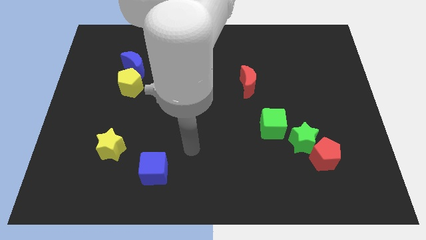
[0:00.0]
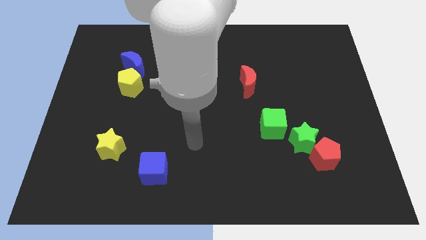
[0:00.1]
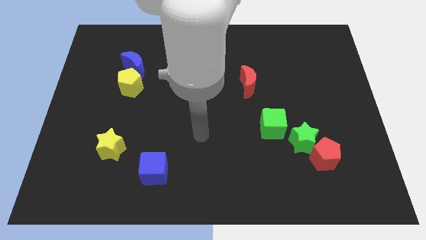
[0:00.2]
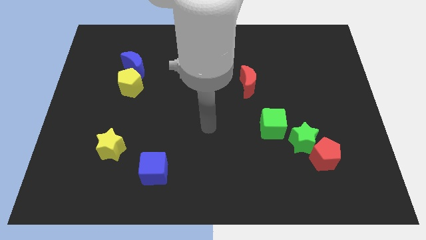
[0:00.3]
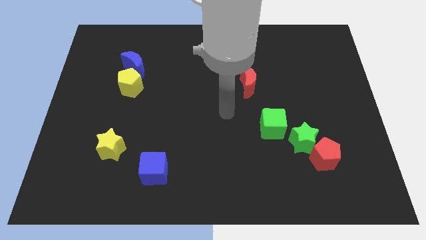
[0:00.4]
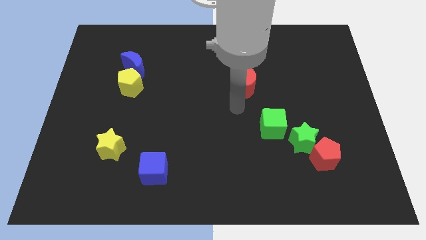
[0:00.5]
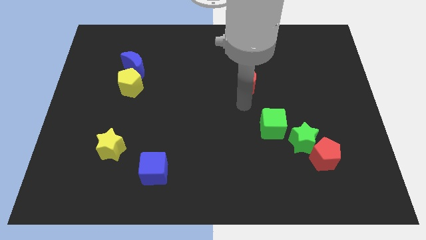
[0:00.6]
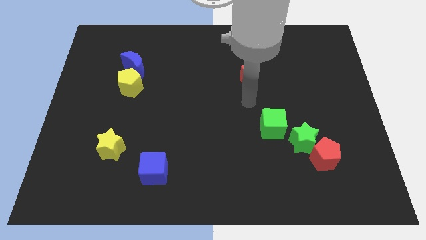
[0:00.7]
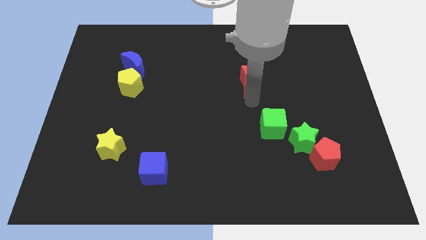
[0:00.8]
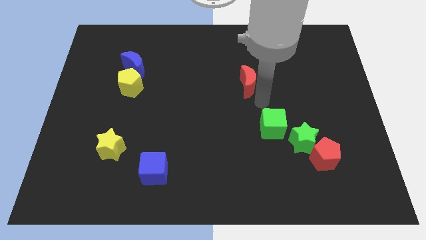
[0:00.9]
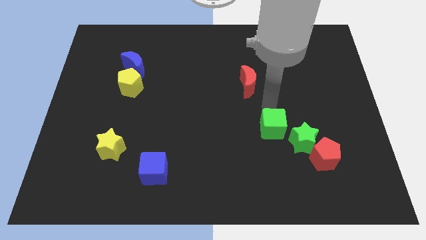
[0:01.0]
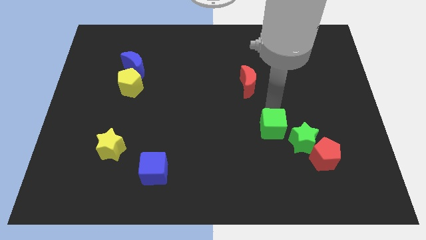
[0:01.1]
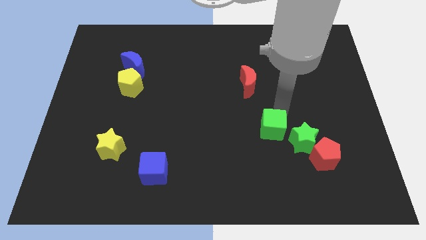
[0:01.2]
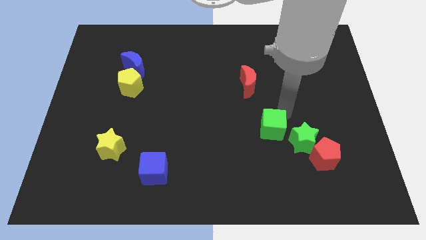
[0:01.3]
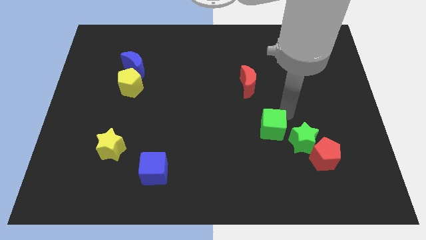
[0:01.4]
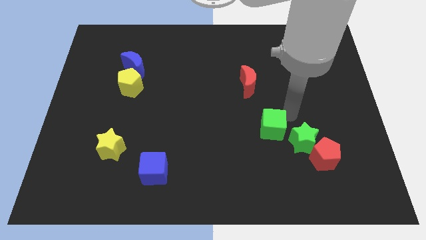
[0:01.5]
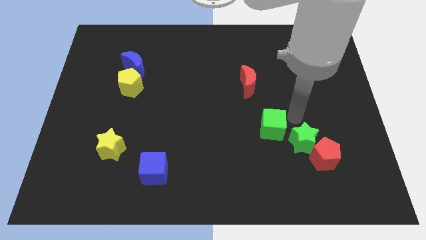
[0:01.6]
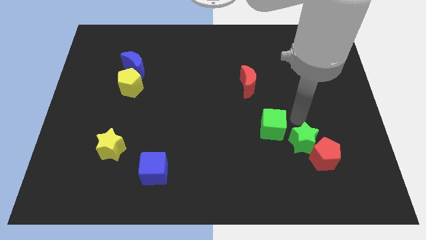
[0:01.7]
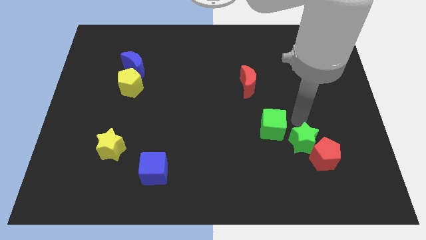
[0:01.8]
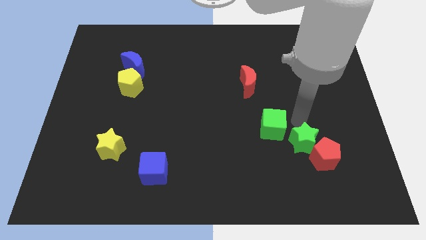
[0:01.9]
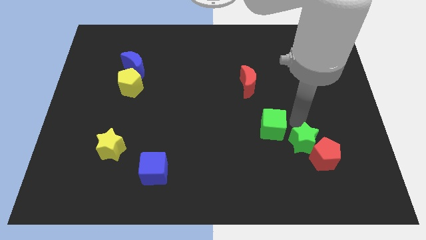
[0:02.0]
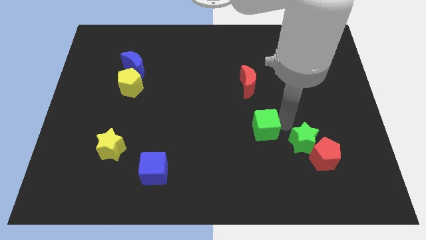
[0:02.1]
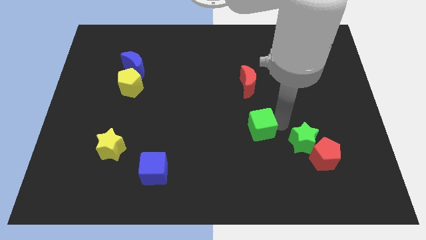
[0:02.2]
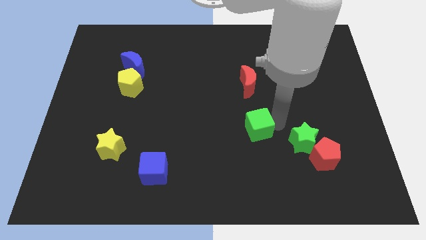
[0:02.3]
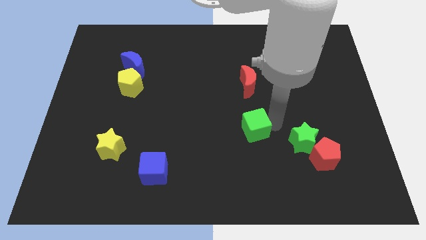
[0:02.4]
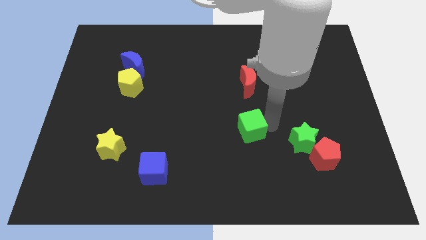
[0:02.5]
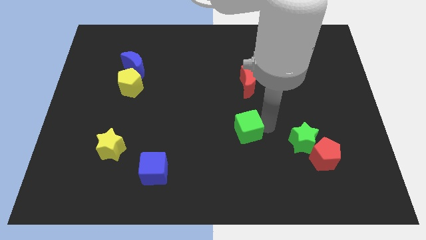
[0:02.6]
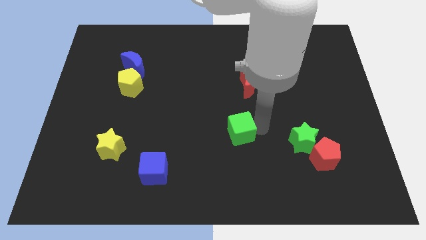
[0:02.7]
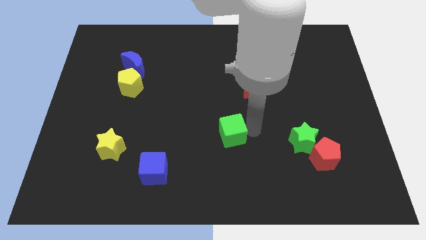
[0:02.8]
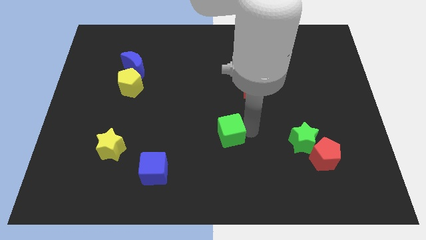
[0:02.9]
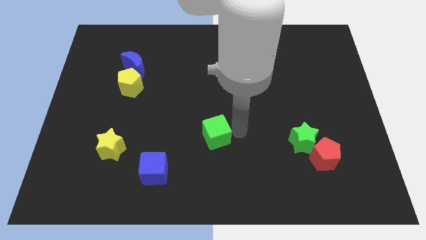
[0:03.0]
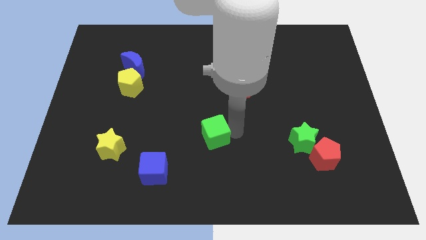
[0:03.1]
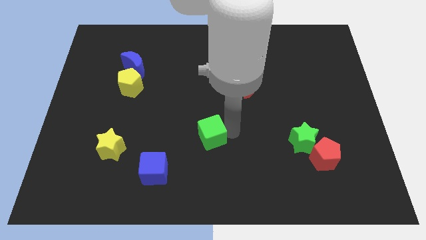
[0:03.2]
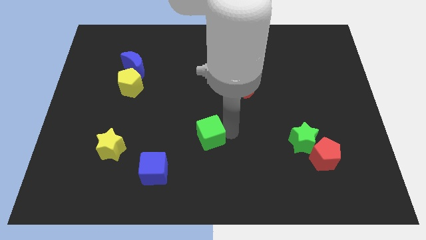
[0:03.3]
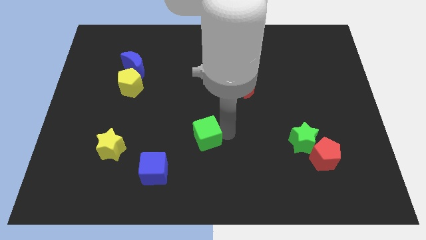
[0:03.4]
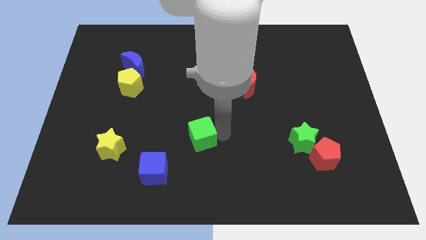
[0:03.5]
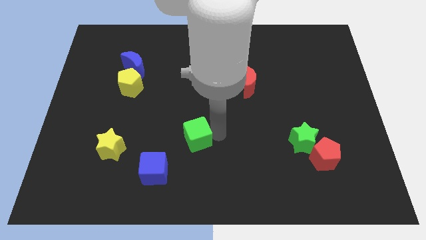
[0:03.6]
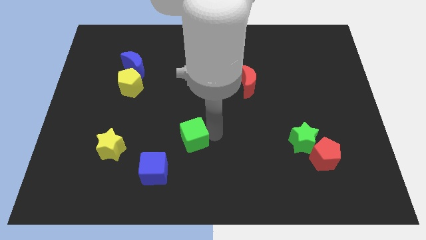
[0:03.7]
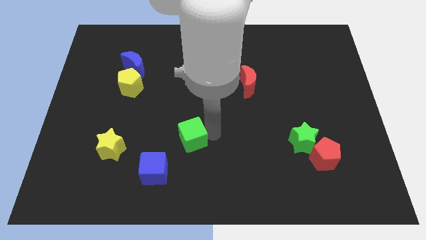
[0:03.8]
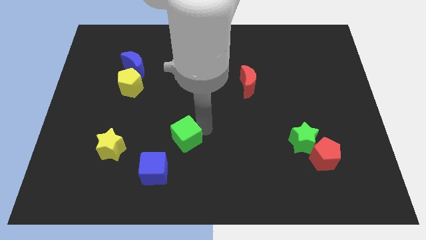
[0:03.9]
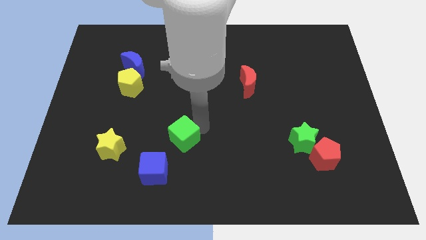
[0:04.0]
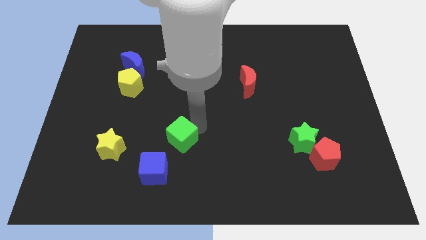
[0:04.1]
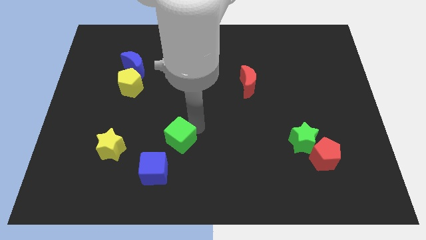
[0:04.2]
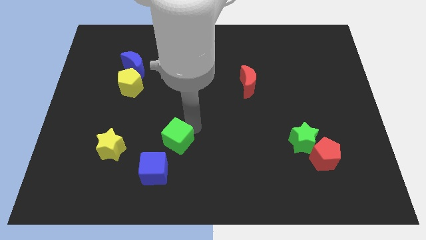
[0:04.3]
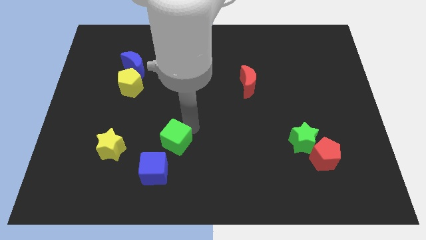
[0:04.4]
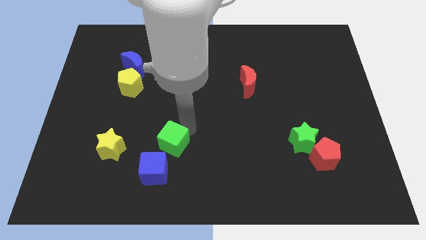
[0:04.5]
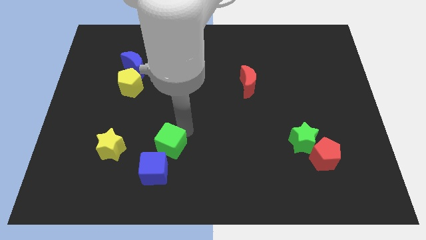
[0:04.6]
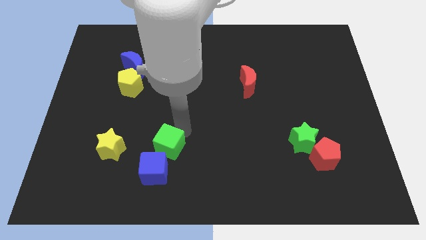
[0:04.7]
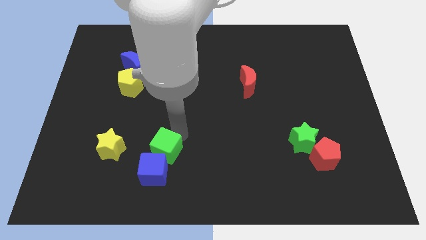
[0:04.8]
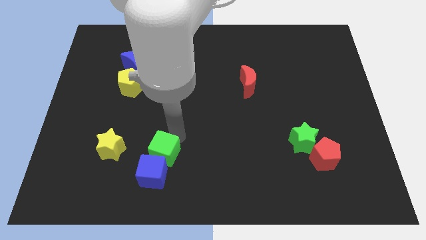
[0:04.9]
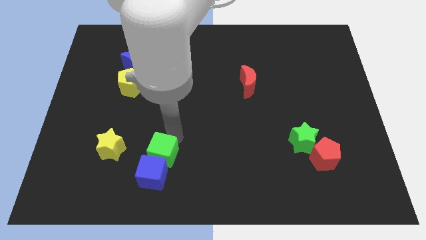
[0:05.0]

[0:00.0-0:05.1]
push the green cube to the blue cube

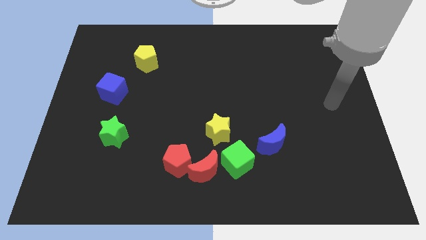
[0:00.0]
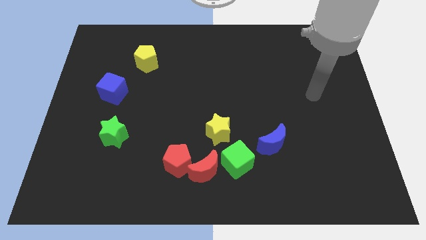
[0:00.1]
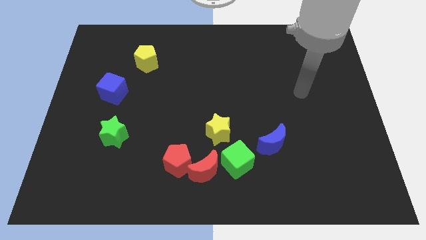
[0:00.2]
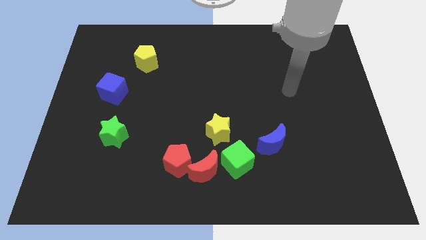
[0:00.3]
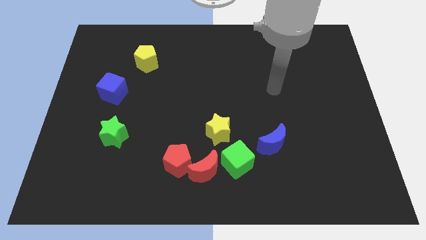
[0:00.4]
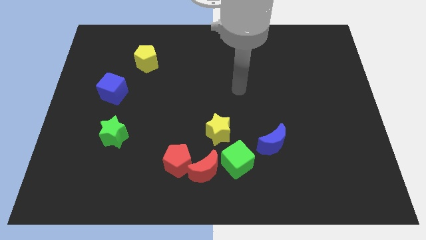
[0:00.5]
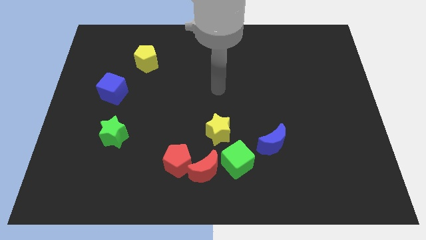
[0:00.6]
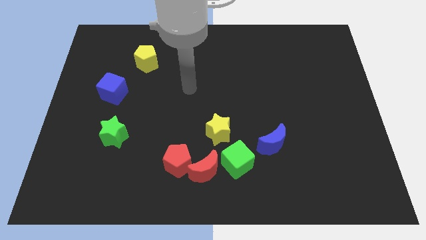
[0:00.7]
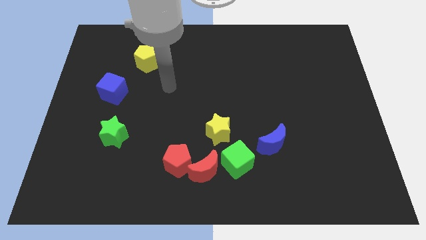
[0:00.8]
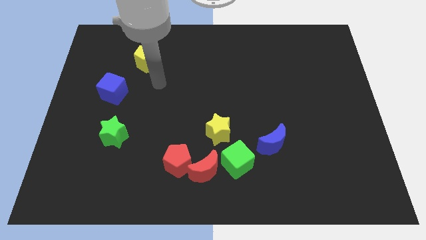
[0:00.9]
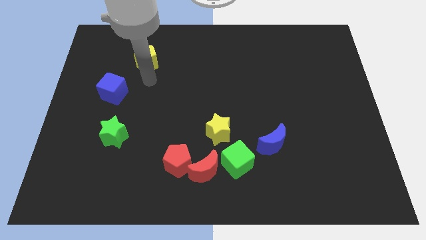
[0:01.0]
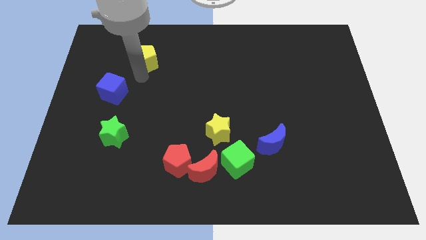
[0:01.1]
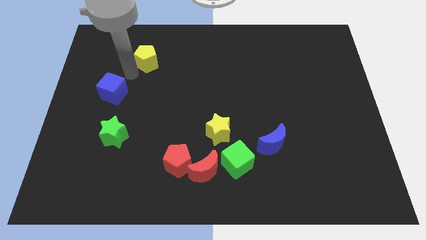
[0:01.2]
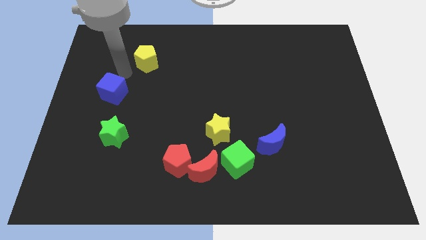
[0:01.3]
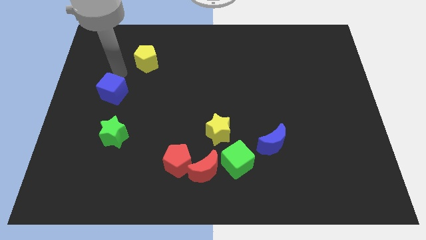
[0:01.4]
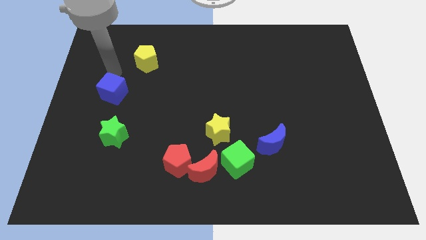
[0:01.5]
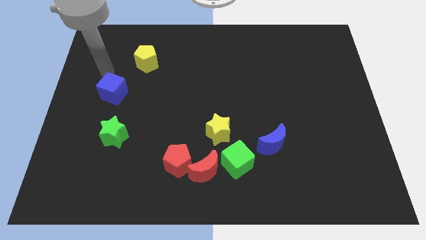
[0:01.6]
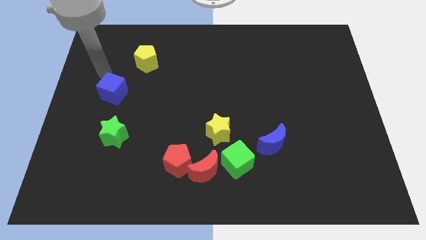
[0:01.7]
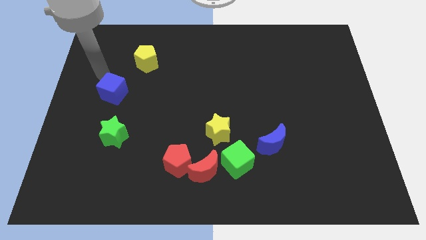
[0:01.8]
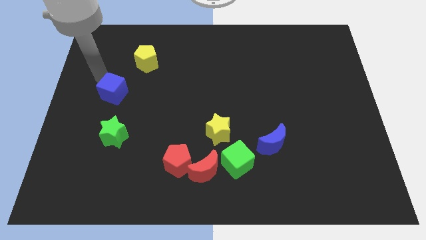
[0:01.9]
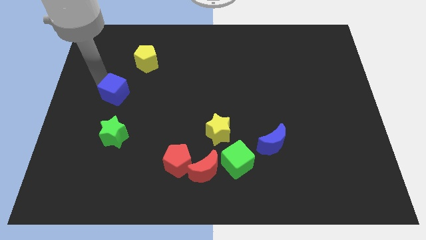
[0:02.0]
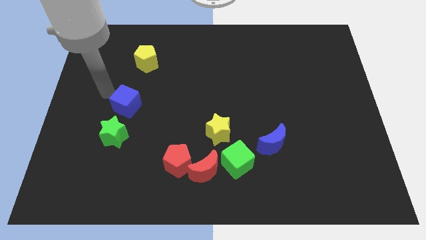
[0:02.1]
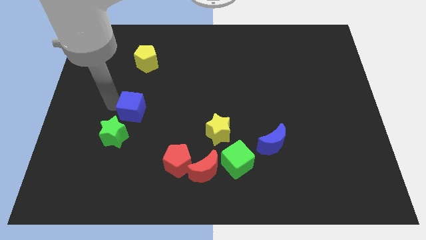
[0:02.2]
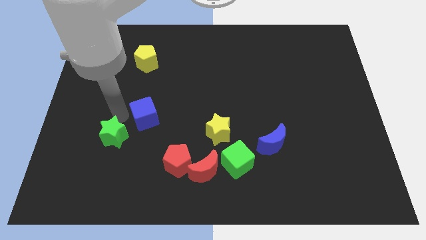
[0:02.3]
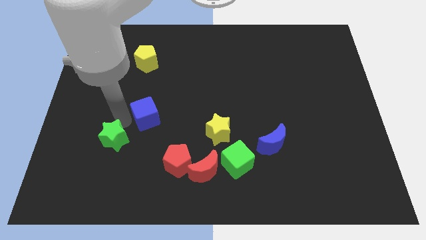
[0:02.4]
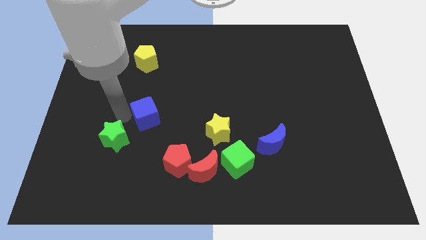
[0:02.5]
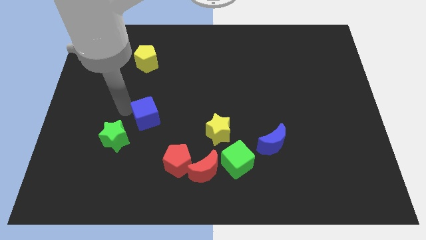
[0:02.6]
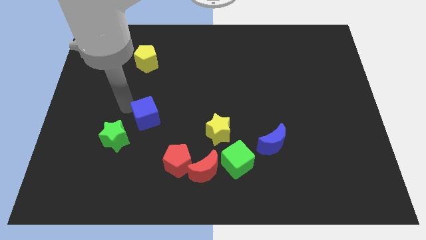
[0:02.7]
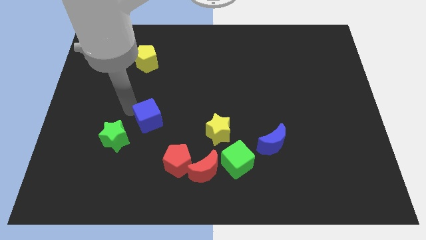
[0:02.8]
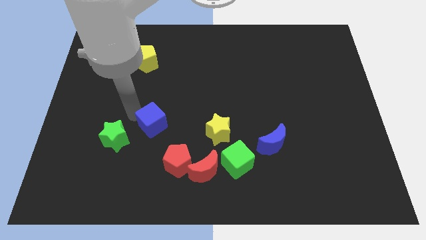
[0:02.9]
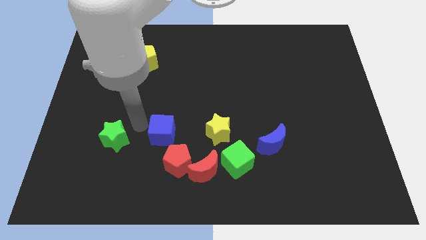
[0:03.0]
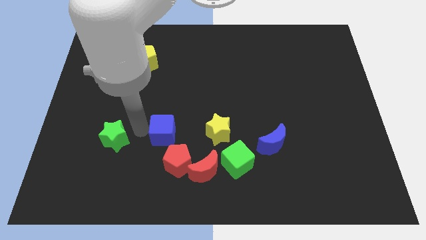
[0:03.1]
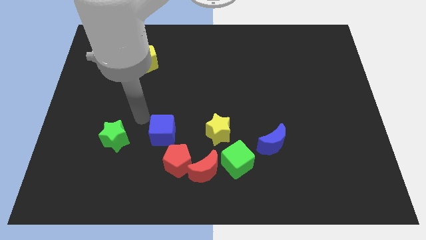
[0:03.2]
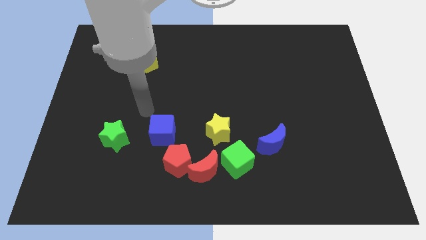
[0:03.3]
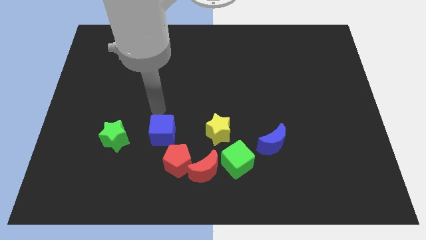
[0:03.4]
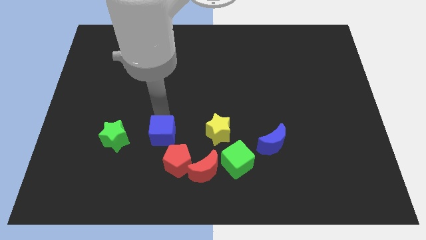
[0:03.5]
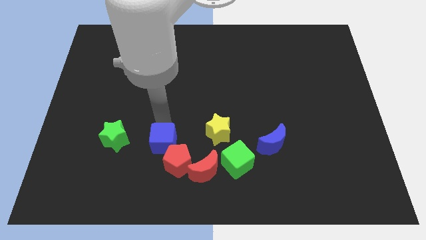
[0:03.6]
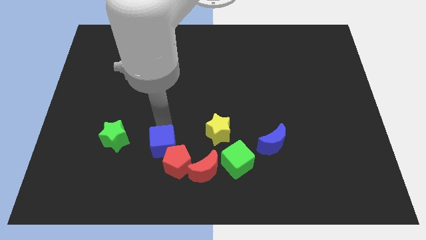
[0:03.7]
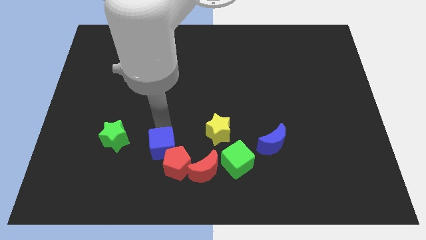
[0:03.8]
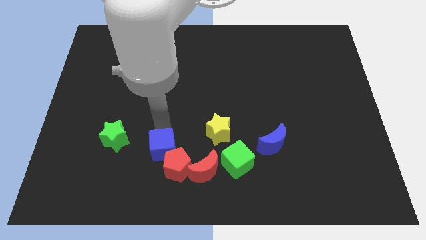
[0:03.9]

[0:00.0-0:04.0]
slide the blue cube to the red pentagon
